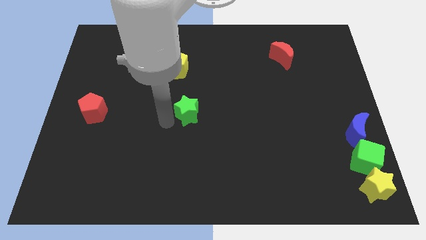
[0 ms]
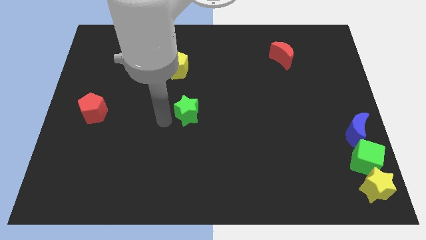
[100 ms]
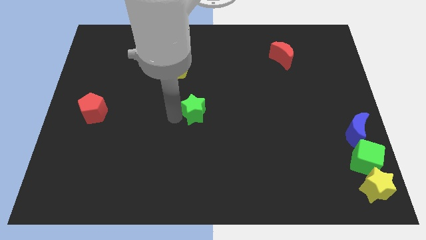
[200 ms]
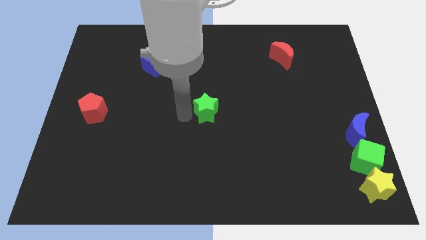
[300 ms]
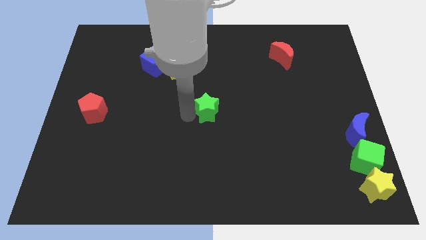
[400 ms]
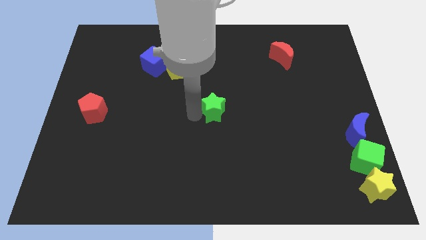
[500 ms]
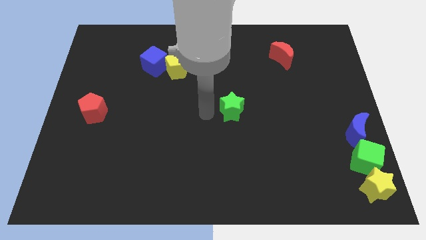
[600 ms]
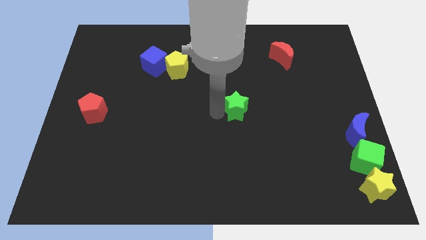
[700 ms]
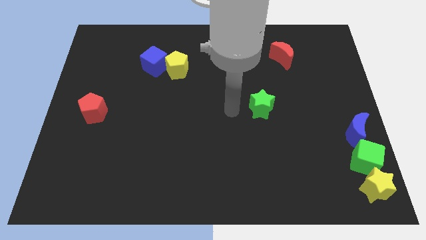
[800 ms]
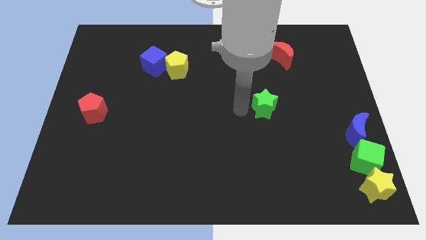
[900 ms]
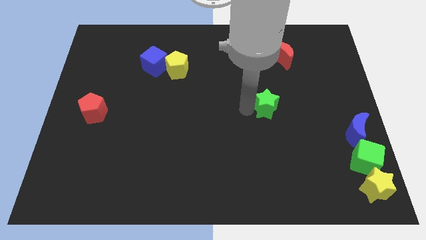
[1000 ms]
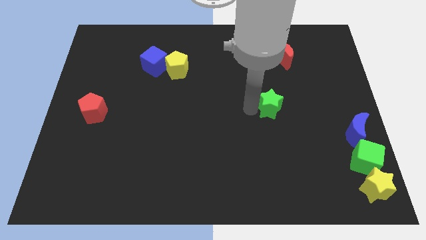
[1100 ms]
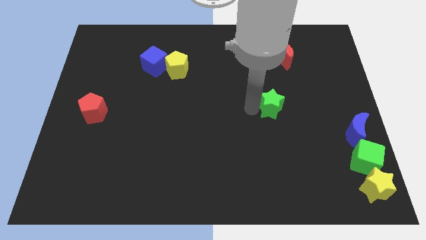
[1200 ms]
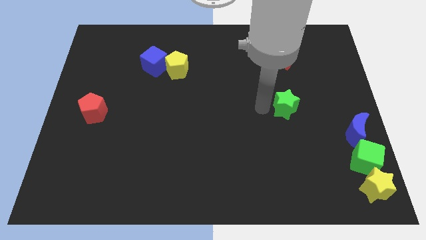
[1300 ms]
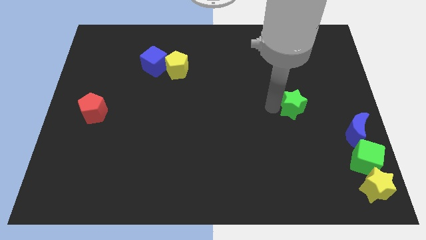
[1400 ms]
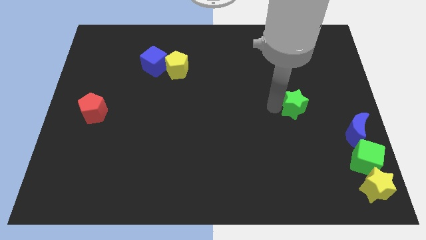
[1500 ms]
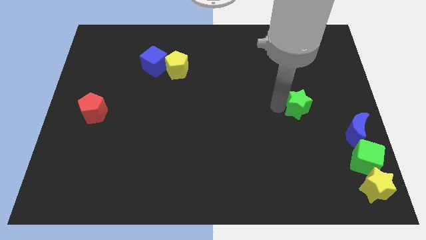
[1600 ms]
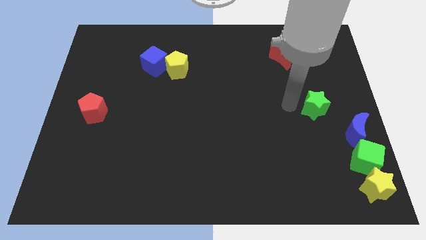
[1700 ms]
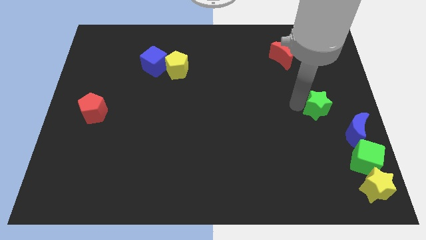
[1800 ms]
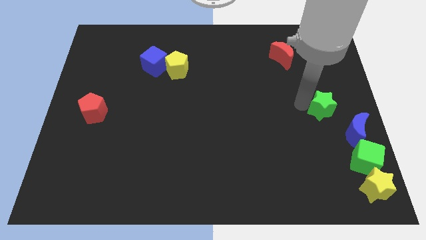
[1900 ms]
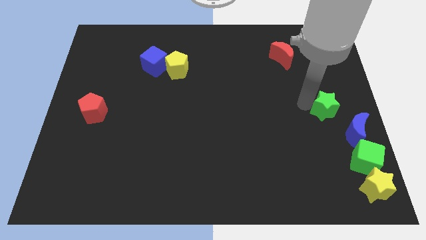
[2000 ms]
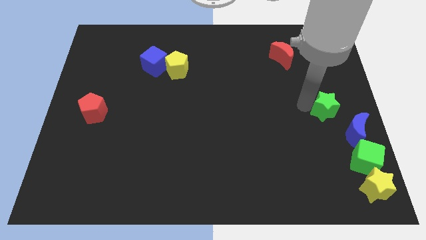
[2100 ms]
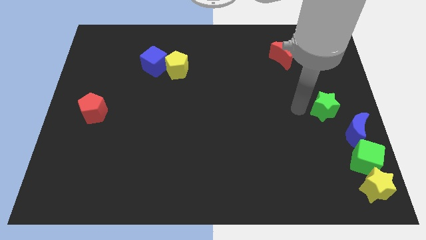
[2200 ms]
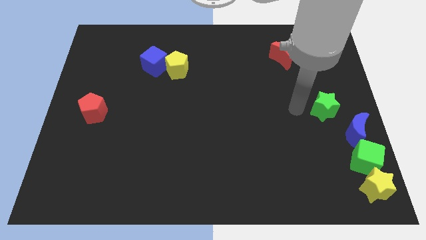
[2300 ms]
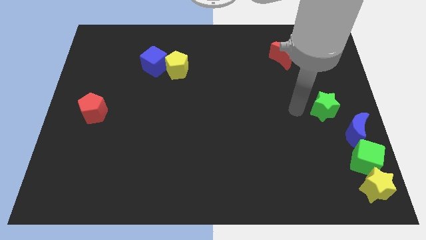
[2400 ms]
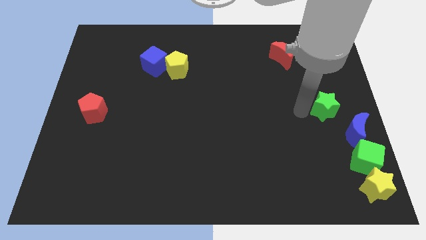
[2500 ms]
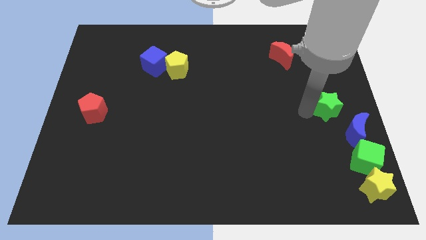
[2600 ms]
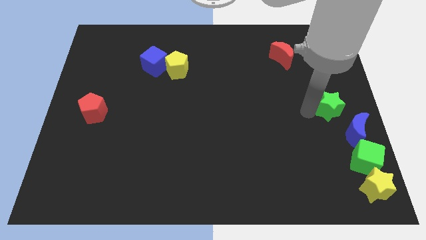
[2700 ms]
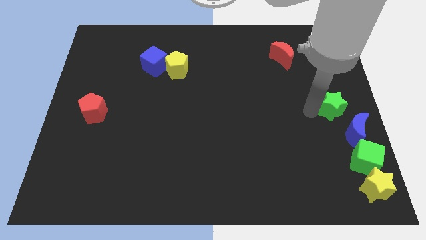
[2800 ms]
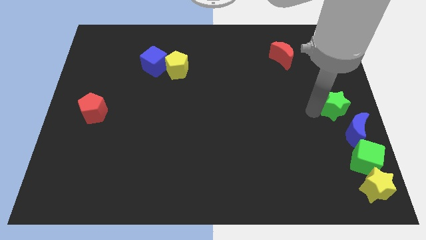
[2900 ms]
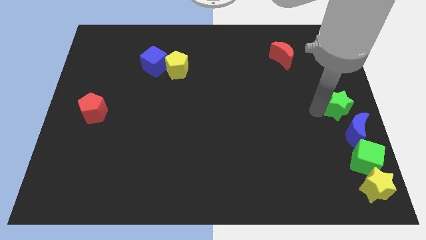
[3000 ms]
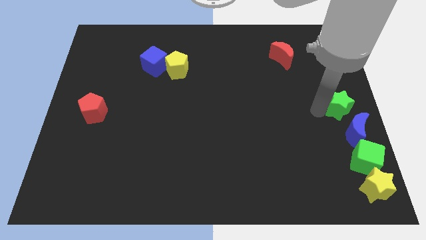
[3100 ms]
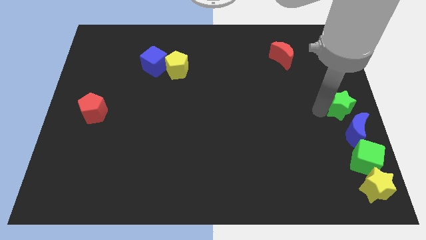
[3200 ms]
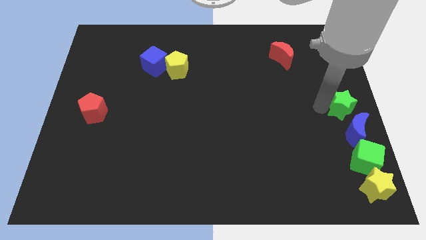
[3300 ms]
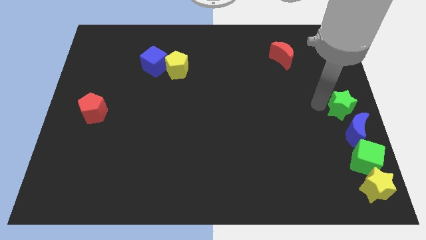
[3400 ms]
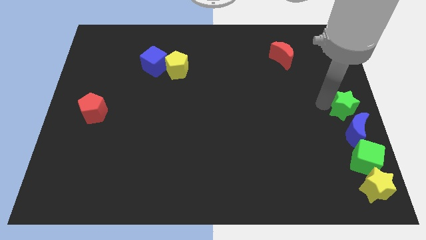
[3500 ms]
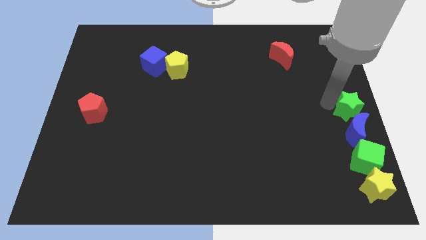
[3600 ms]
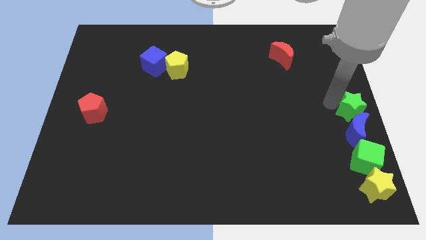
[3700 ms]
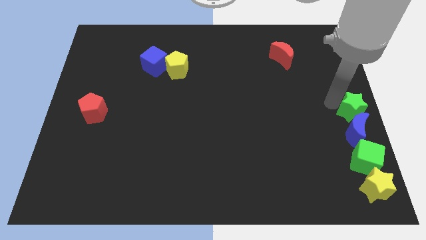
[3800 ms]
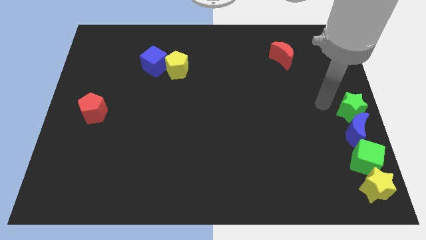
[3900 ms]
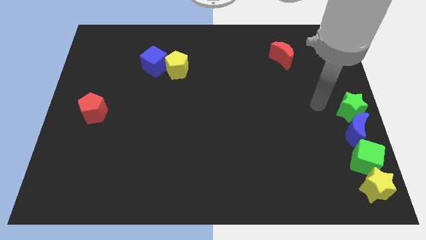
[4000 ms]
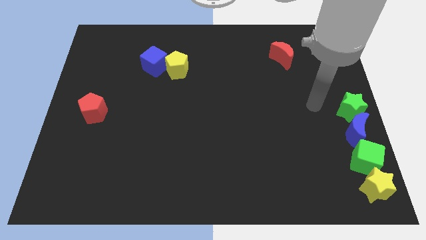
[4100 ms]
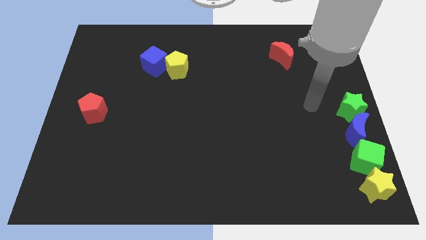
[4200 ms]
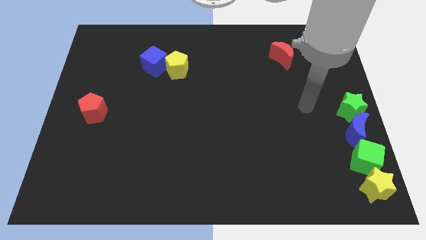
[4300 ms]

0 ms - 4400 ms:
place green star to the top of blue crescent

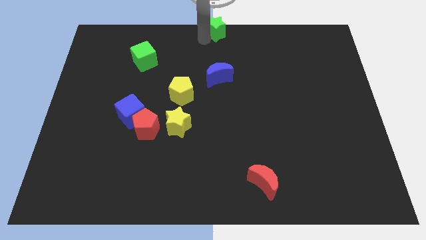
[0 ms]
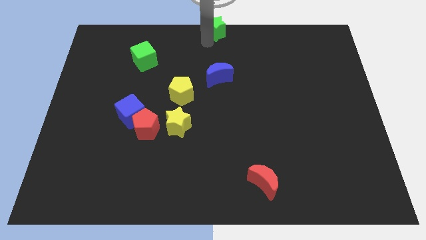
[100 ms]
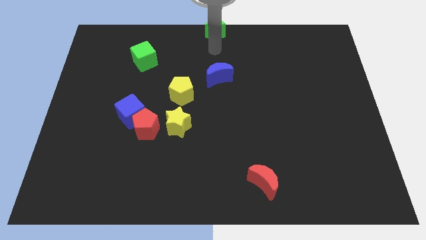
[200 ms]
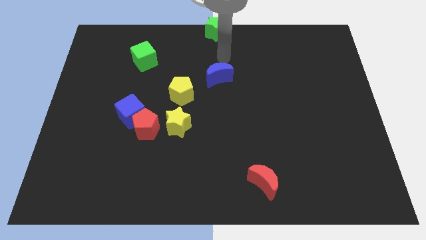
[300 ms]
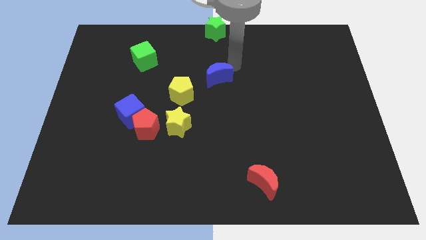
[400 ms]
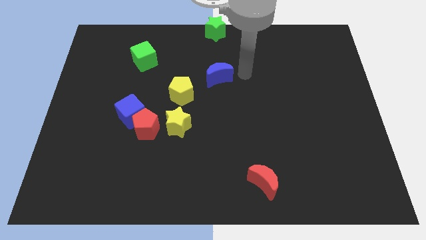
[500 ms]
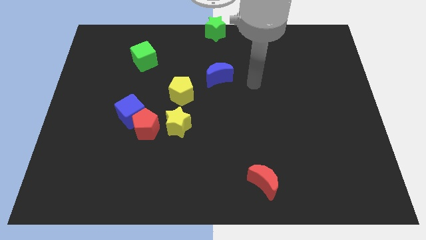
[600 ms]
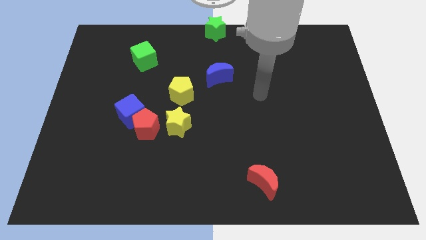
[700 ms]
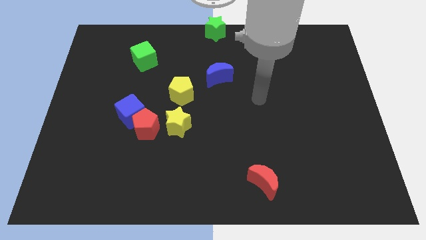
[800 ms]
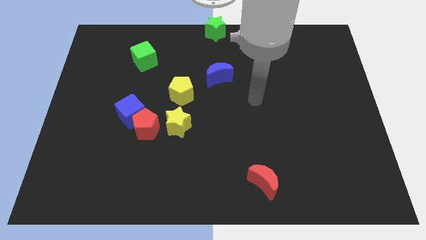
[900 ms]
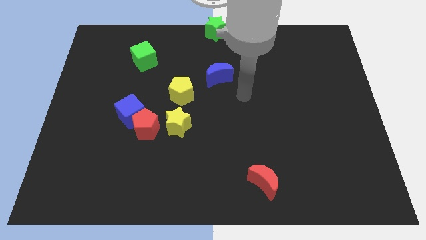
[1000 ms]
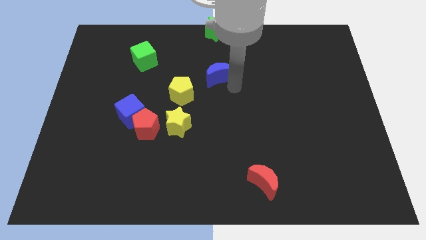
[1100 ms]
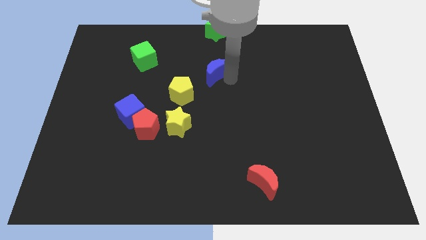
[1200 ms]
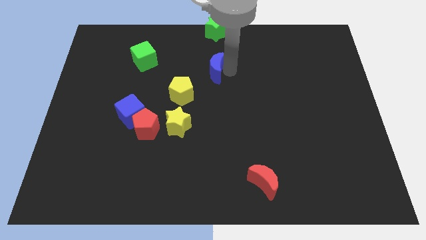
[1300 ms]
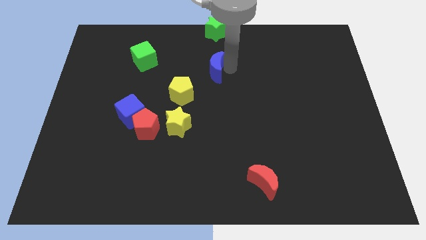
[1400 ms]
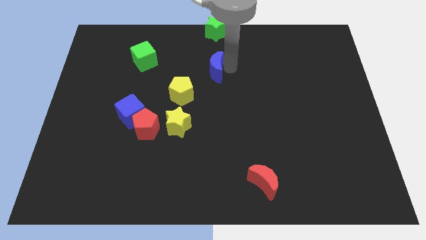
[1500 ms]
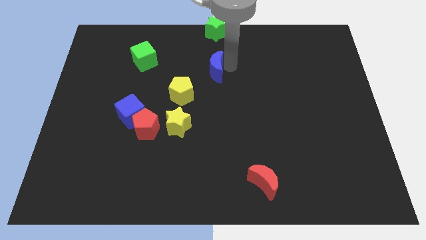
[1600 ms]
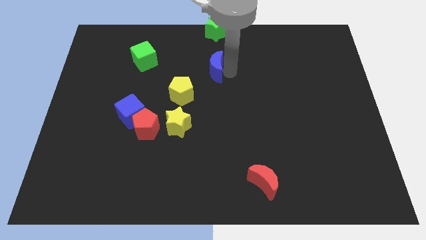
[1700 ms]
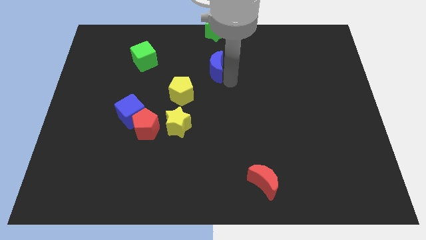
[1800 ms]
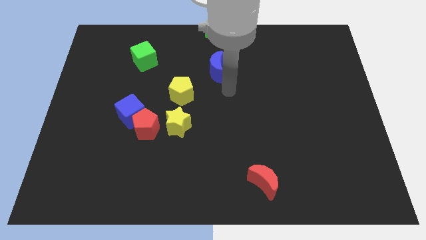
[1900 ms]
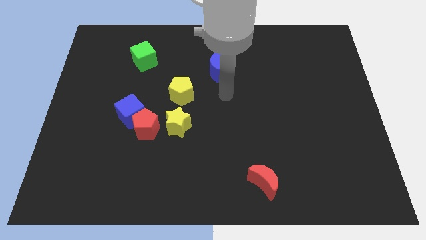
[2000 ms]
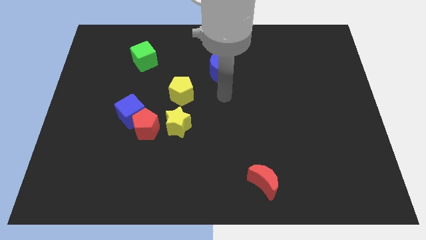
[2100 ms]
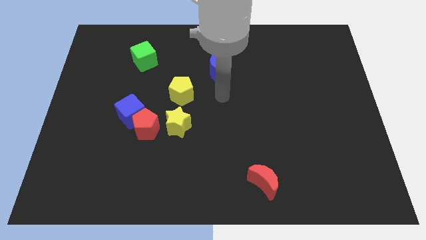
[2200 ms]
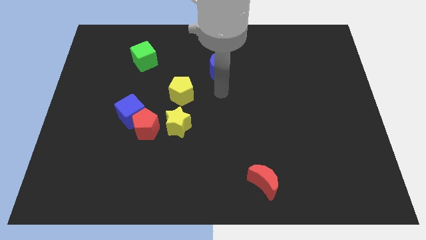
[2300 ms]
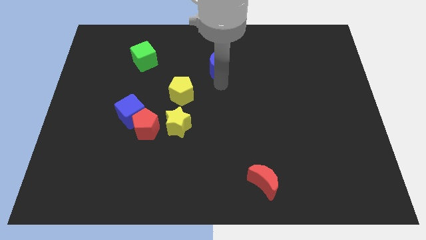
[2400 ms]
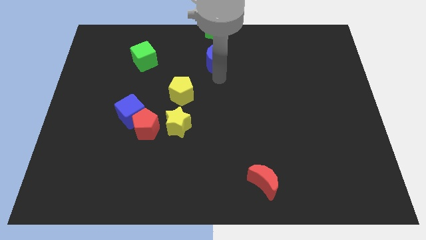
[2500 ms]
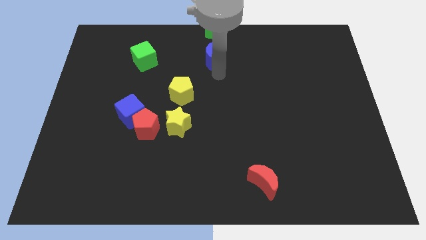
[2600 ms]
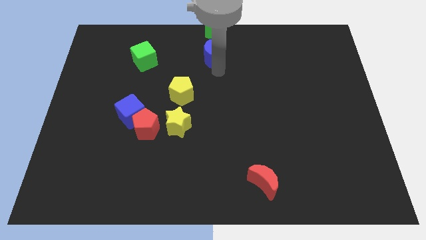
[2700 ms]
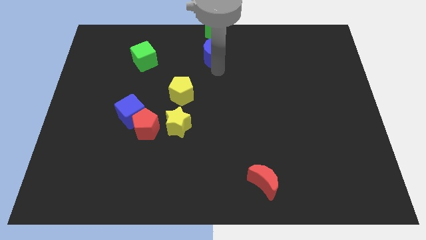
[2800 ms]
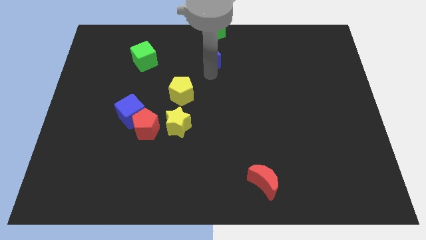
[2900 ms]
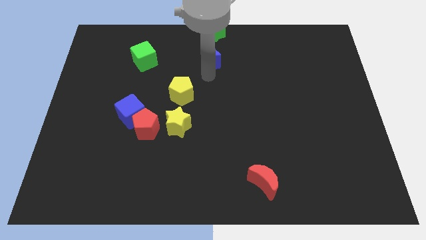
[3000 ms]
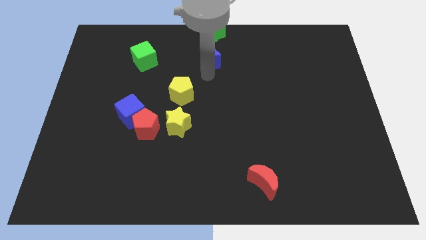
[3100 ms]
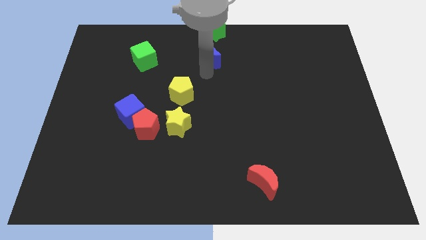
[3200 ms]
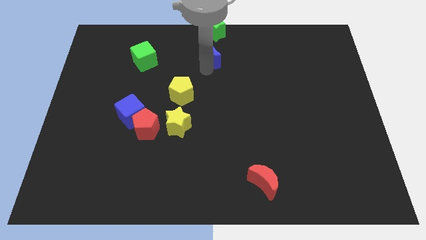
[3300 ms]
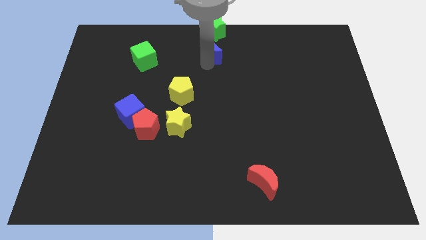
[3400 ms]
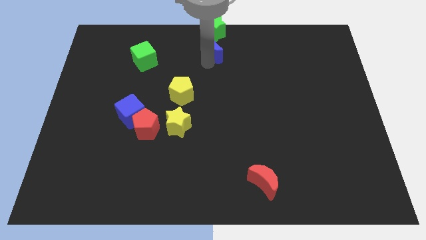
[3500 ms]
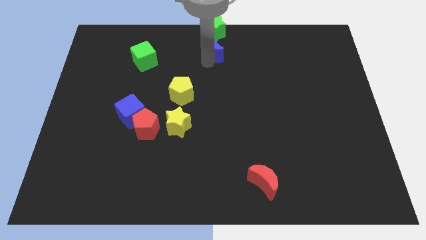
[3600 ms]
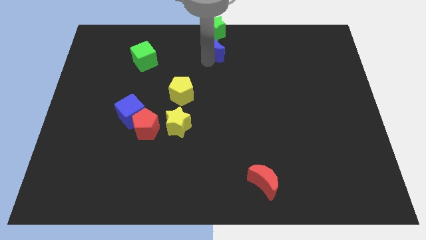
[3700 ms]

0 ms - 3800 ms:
place blue moon below the green star

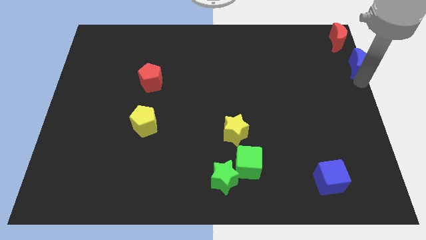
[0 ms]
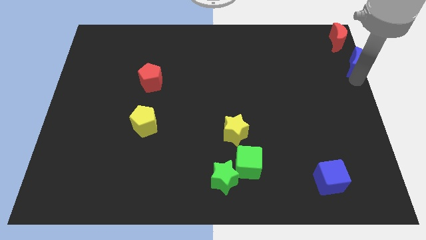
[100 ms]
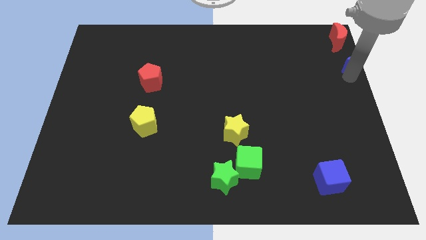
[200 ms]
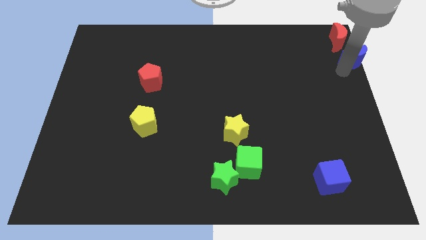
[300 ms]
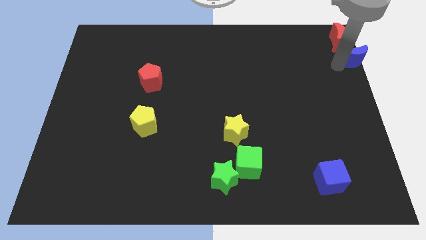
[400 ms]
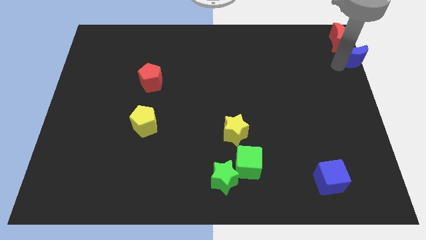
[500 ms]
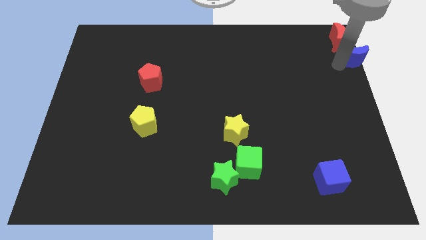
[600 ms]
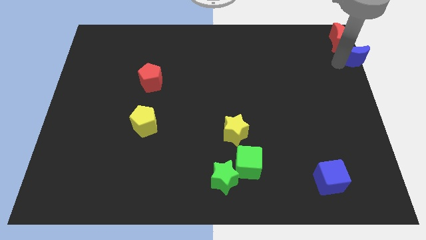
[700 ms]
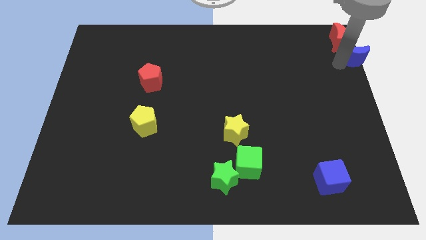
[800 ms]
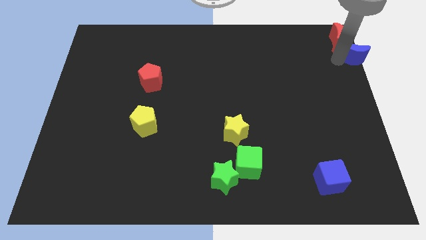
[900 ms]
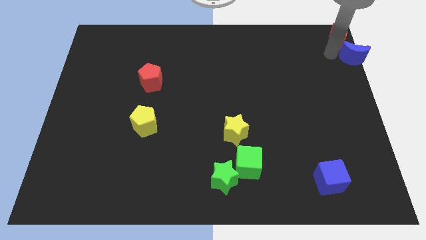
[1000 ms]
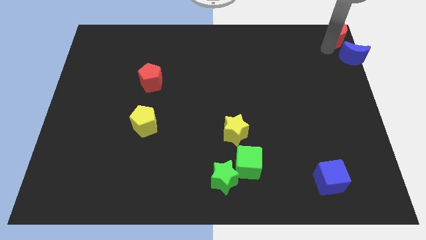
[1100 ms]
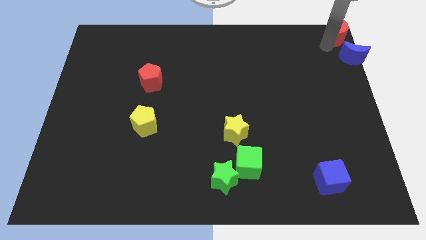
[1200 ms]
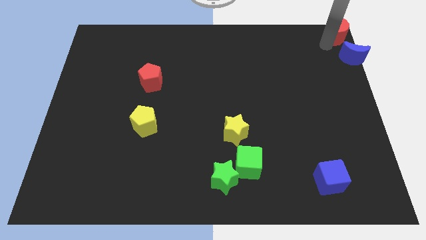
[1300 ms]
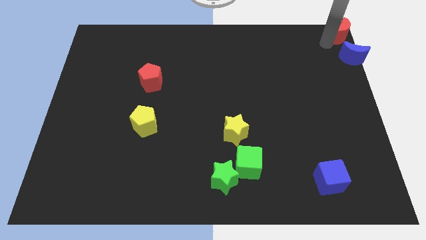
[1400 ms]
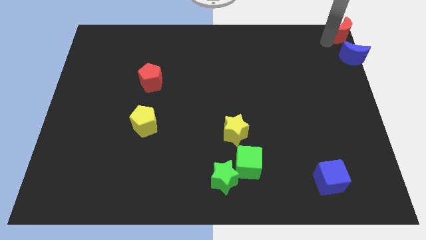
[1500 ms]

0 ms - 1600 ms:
point your arm close to red moon
